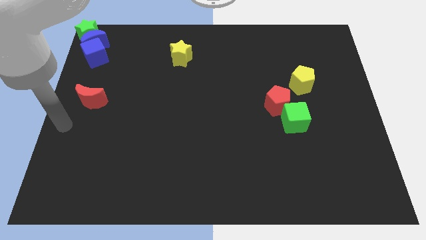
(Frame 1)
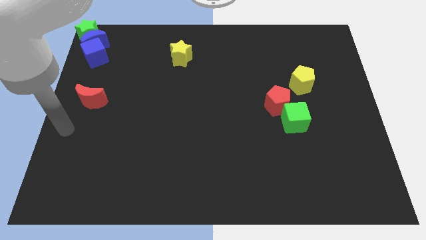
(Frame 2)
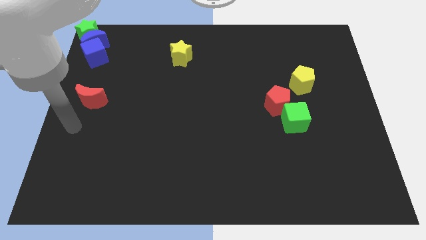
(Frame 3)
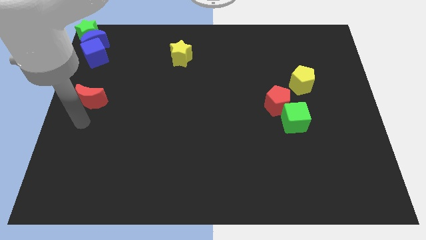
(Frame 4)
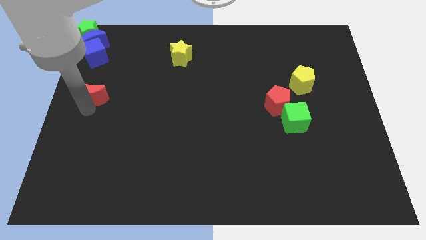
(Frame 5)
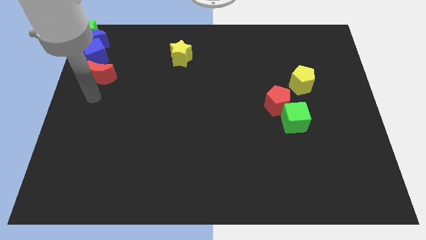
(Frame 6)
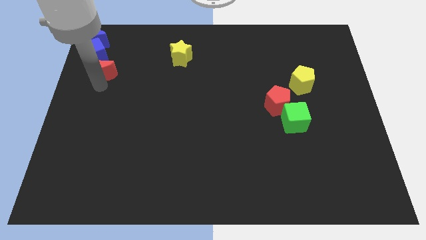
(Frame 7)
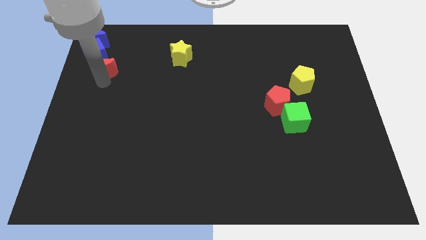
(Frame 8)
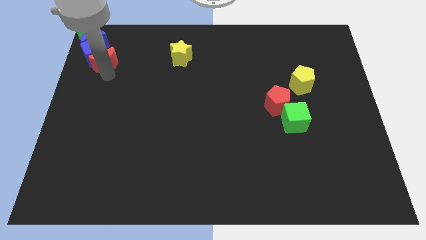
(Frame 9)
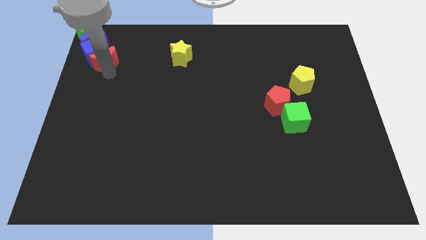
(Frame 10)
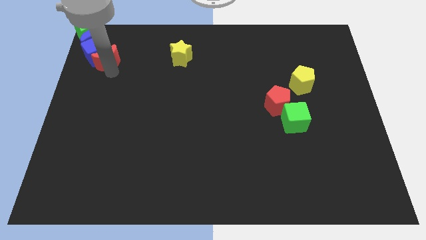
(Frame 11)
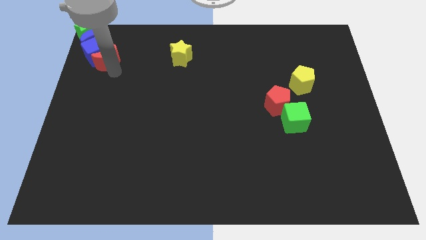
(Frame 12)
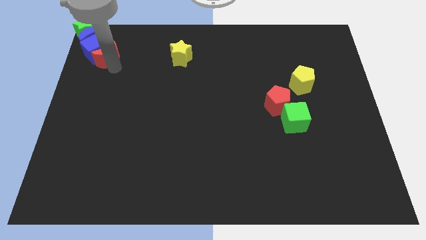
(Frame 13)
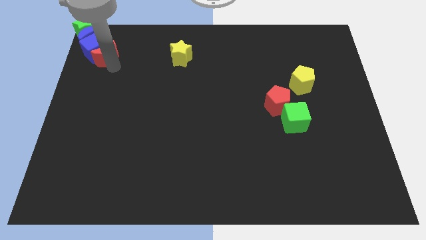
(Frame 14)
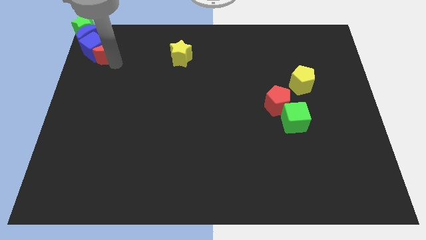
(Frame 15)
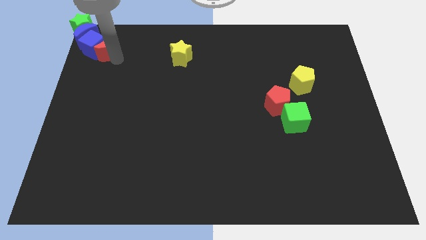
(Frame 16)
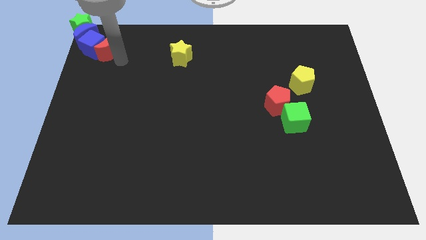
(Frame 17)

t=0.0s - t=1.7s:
push the red moon into the group of blocks

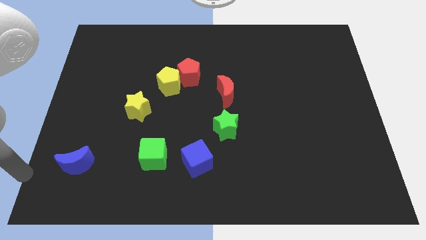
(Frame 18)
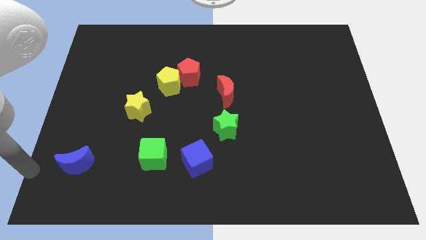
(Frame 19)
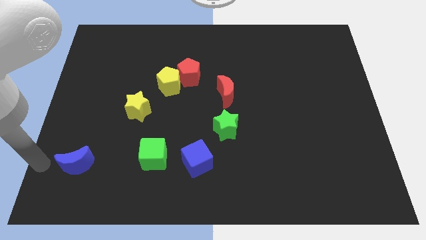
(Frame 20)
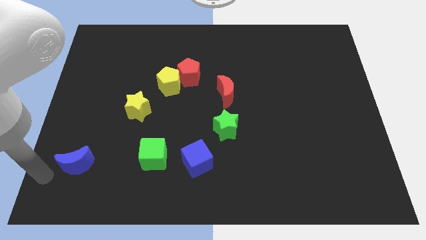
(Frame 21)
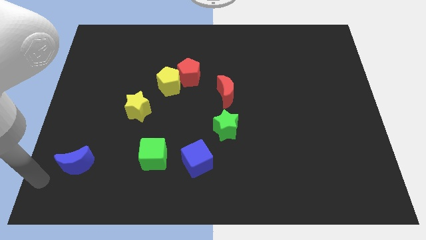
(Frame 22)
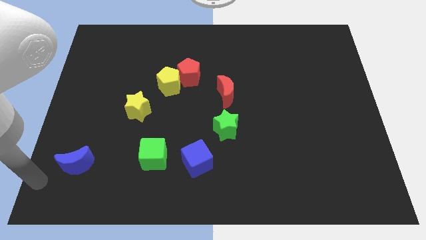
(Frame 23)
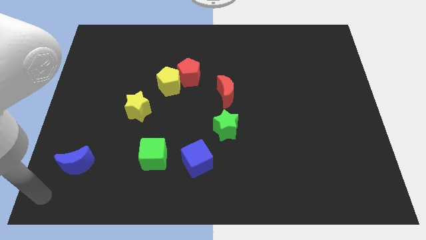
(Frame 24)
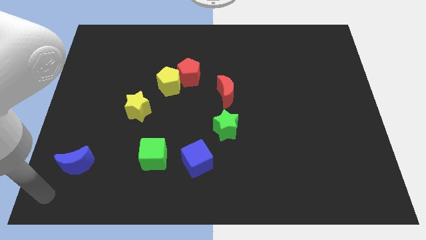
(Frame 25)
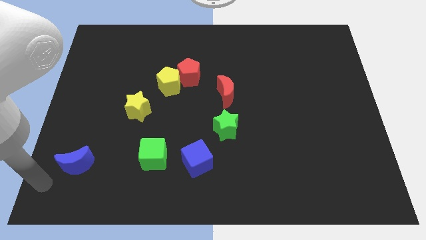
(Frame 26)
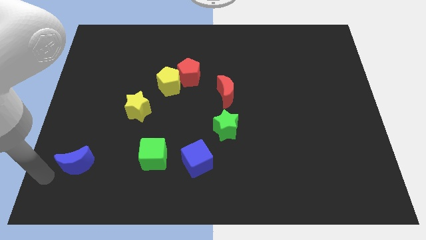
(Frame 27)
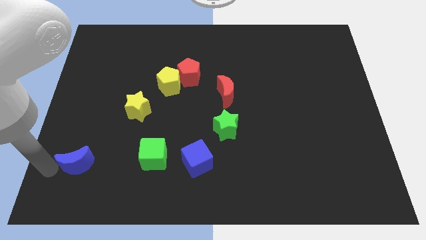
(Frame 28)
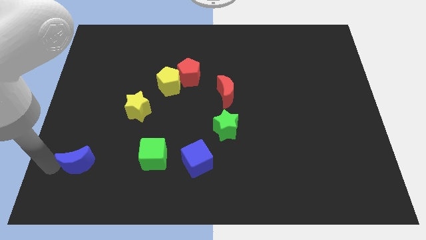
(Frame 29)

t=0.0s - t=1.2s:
place your arm left towards blue crescent

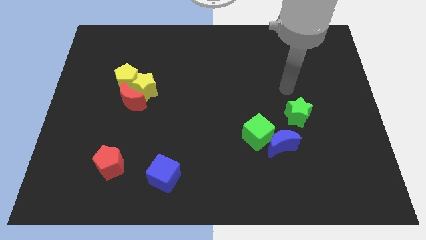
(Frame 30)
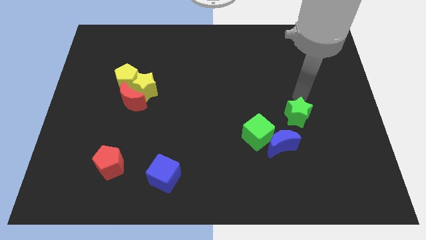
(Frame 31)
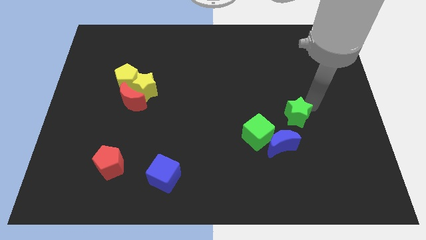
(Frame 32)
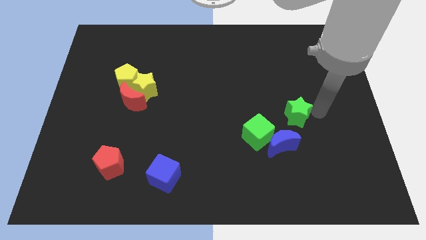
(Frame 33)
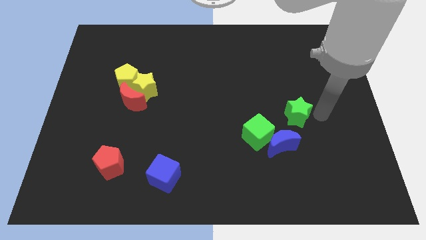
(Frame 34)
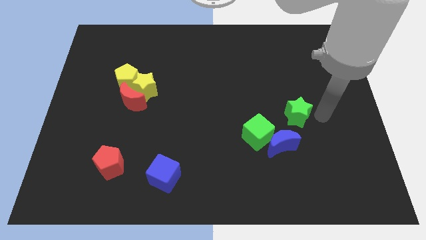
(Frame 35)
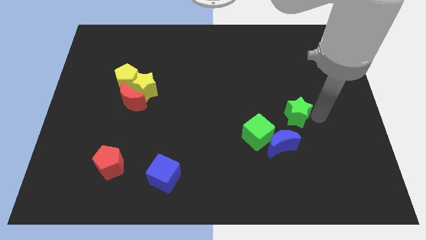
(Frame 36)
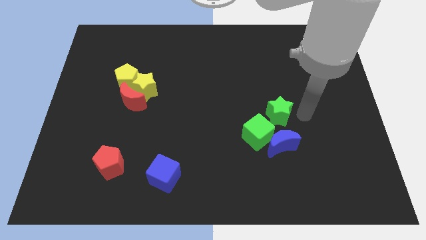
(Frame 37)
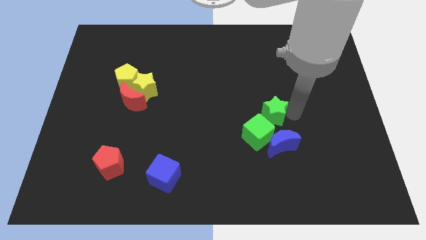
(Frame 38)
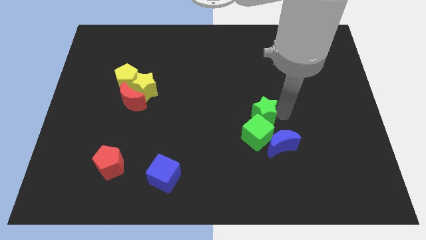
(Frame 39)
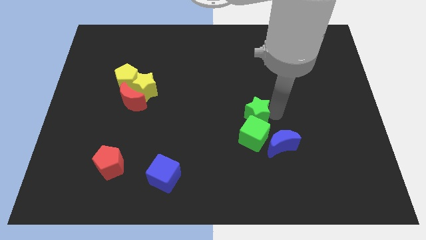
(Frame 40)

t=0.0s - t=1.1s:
move green star into green cube

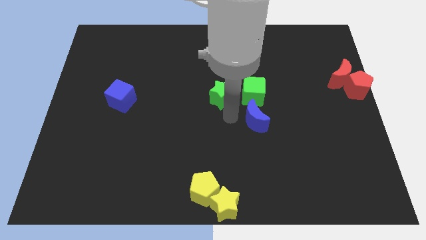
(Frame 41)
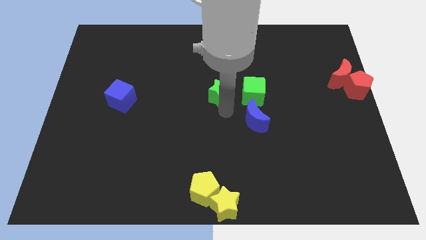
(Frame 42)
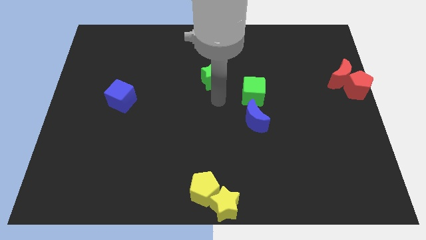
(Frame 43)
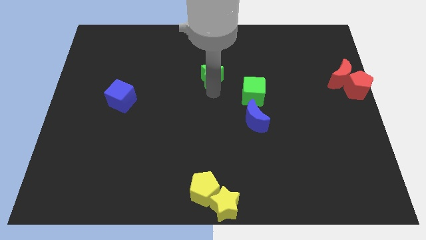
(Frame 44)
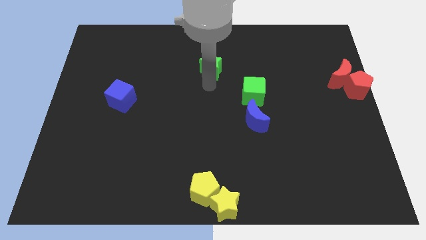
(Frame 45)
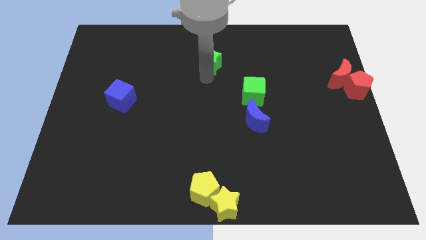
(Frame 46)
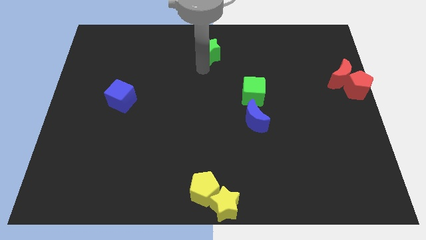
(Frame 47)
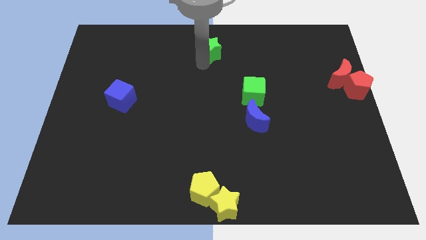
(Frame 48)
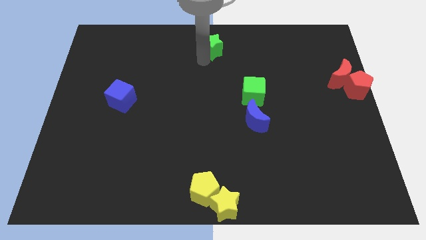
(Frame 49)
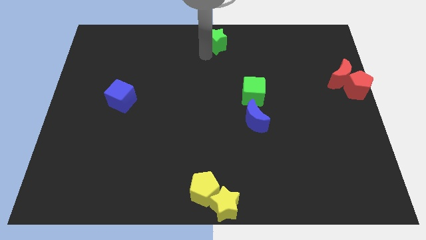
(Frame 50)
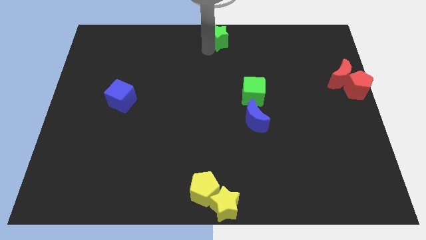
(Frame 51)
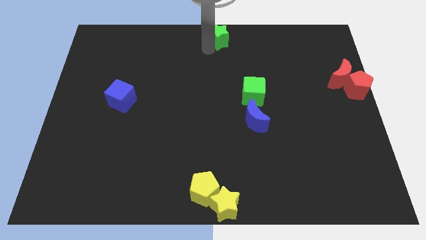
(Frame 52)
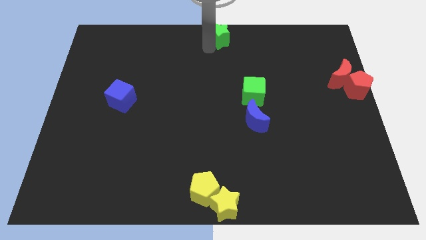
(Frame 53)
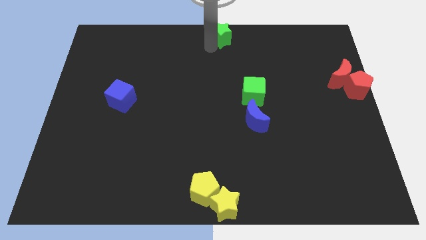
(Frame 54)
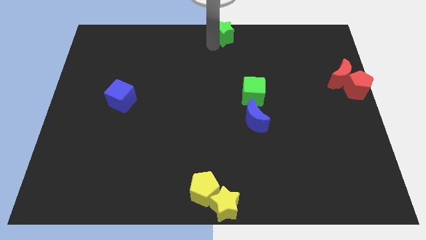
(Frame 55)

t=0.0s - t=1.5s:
move the green star to the top of the board

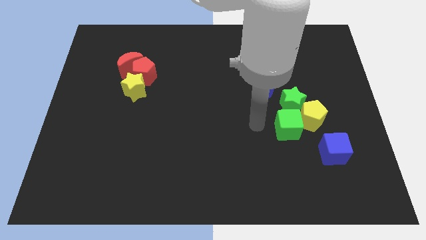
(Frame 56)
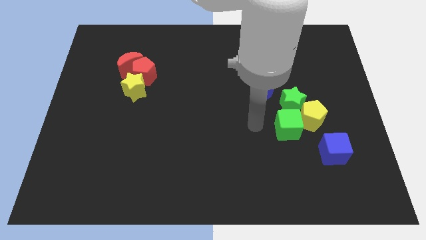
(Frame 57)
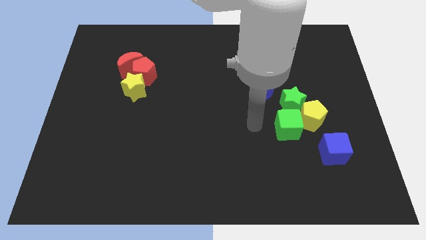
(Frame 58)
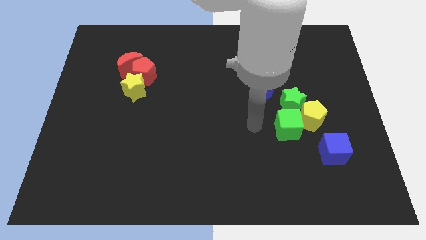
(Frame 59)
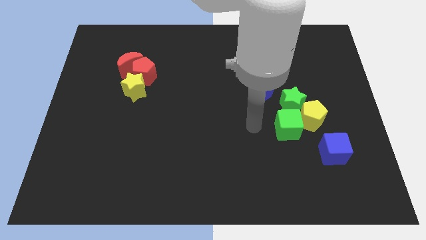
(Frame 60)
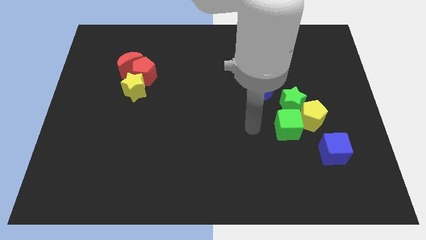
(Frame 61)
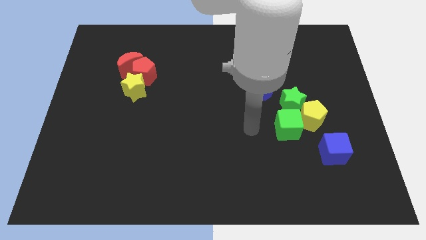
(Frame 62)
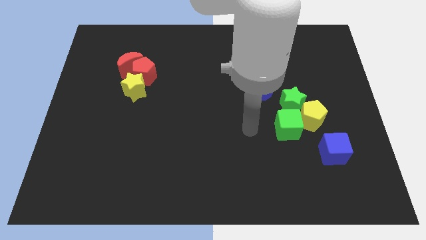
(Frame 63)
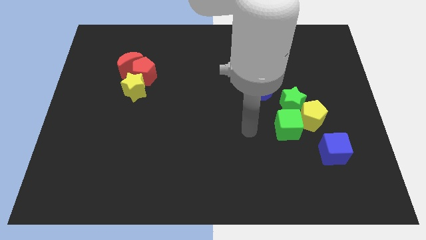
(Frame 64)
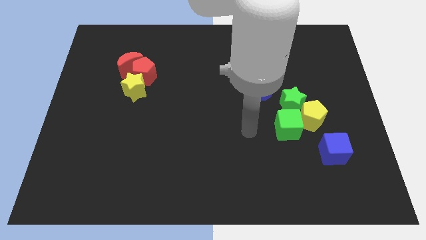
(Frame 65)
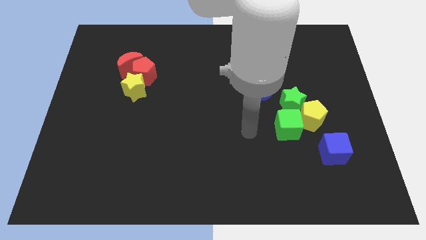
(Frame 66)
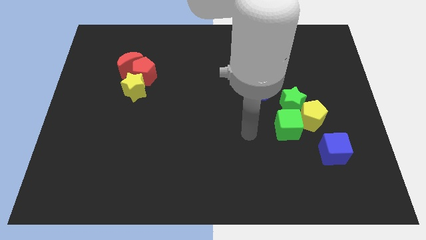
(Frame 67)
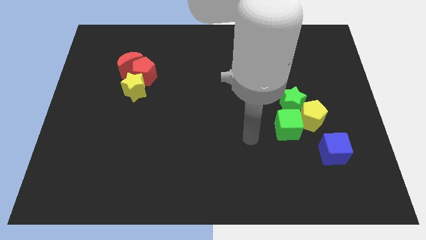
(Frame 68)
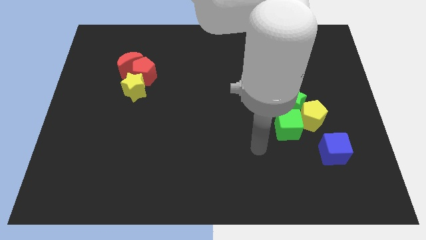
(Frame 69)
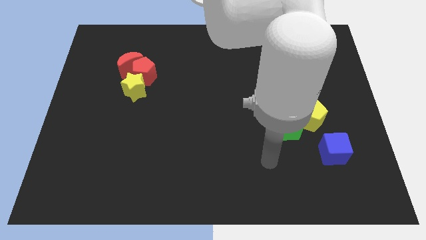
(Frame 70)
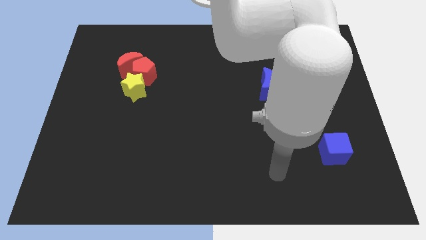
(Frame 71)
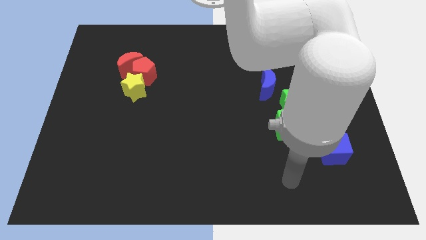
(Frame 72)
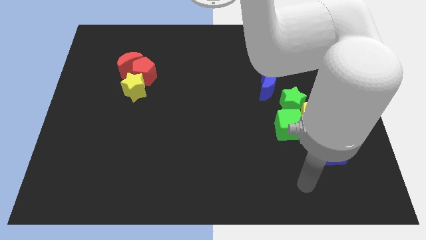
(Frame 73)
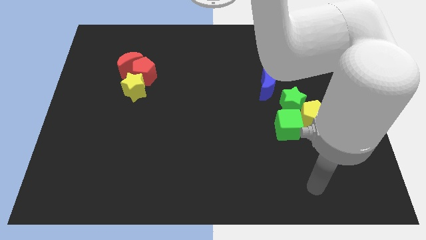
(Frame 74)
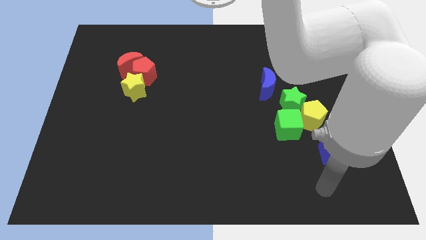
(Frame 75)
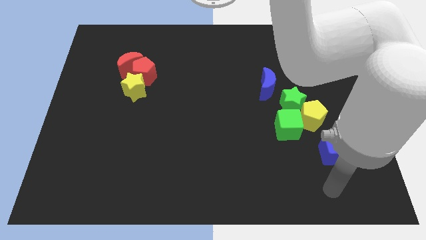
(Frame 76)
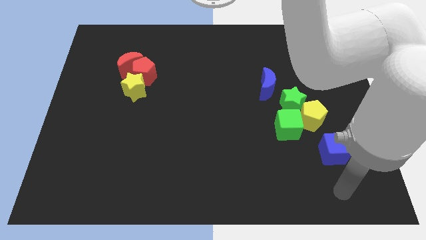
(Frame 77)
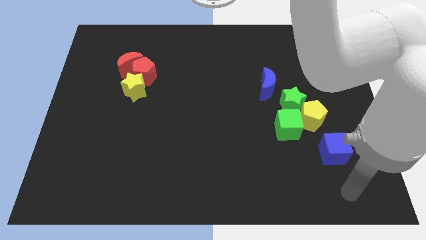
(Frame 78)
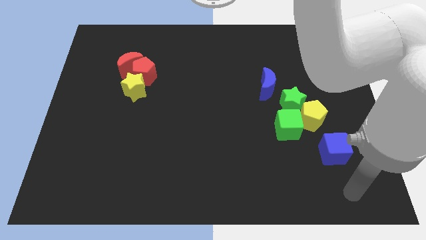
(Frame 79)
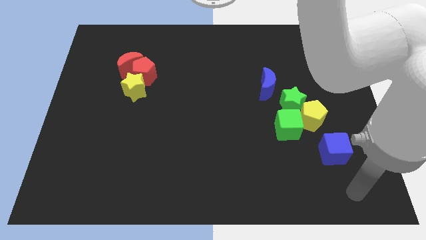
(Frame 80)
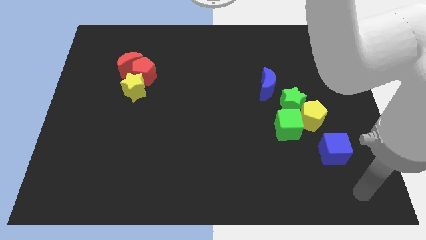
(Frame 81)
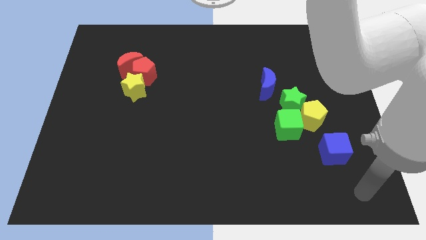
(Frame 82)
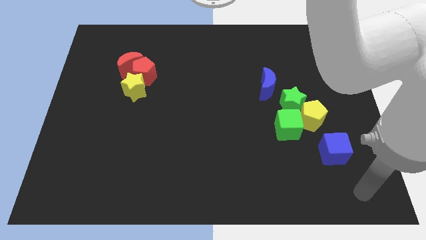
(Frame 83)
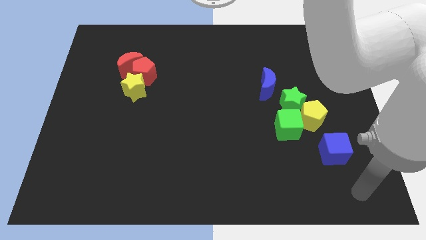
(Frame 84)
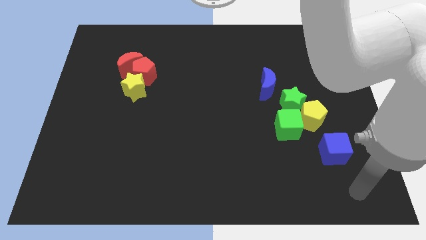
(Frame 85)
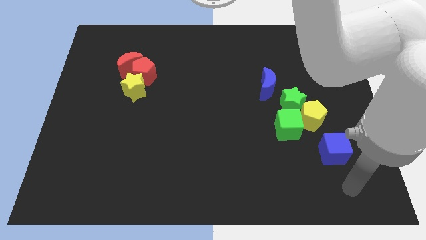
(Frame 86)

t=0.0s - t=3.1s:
move your hand towards the bottom right

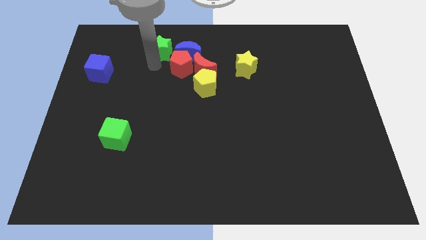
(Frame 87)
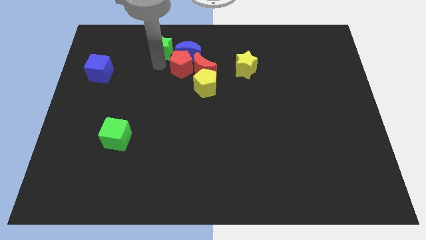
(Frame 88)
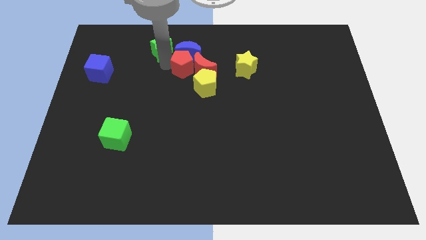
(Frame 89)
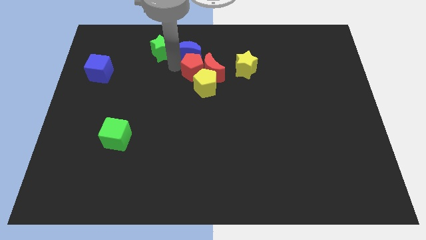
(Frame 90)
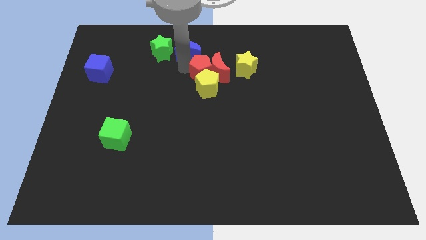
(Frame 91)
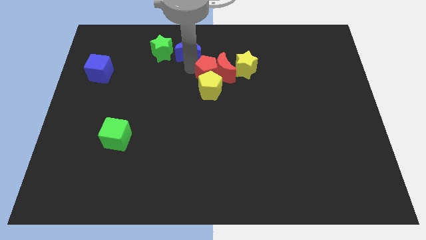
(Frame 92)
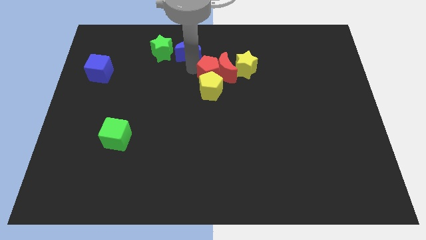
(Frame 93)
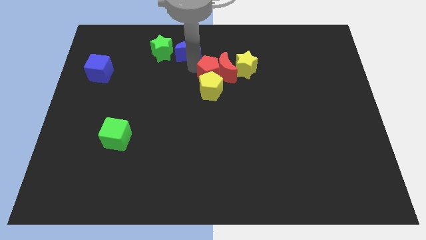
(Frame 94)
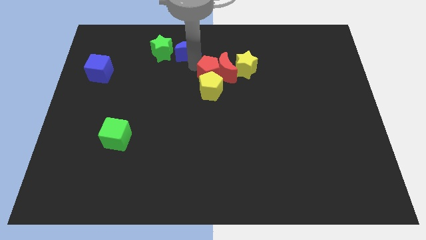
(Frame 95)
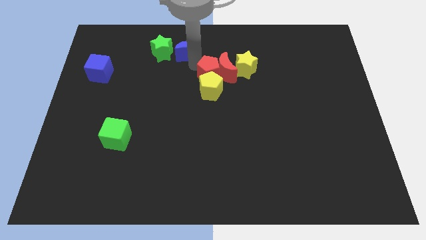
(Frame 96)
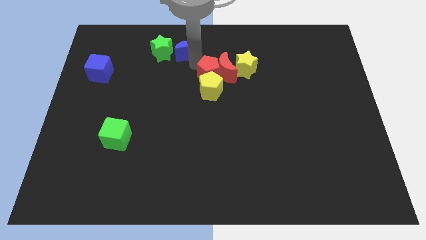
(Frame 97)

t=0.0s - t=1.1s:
push the red pentagon into the left of the red crescent
